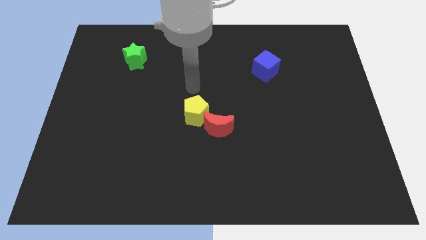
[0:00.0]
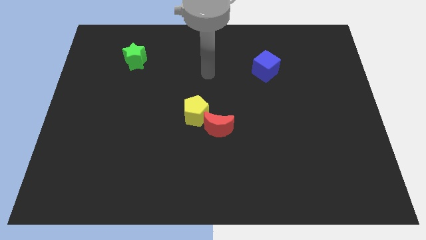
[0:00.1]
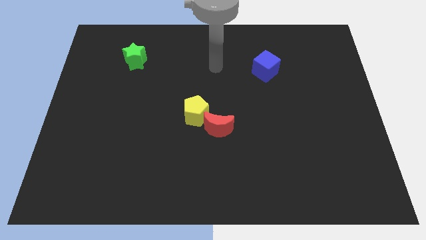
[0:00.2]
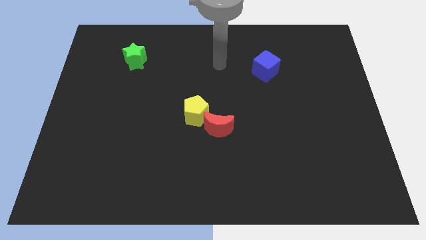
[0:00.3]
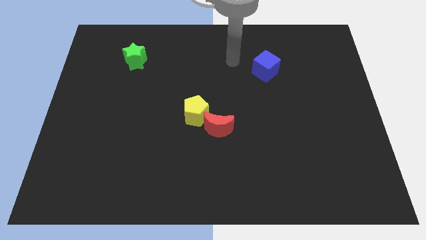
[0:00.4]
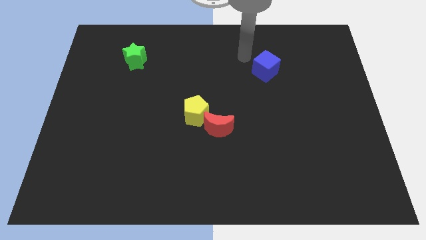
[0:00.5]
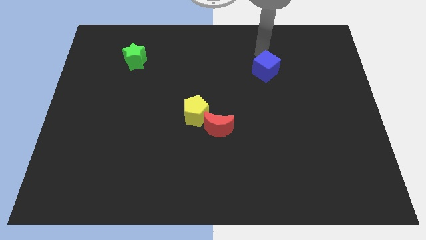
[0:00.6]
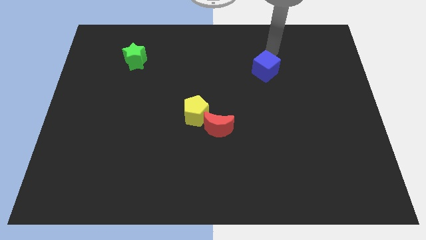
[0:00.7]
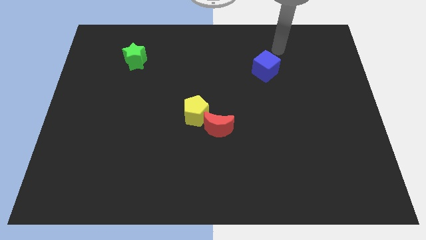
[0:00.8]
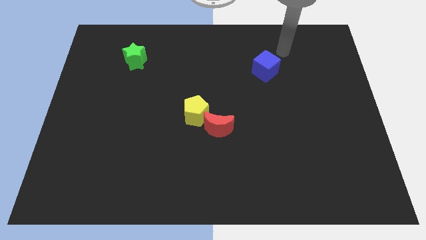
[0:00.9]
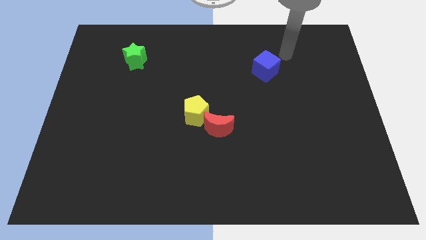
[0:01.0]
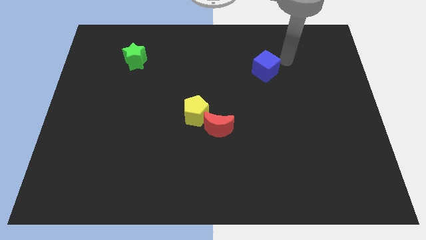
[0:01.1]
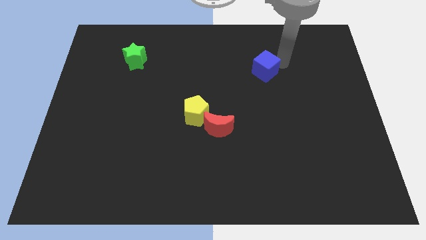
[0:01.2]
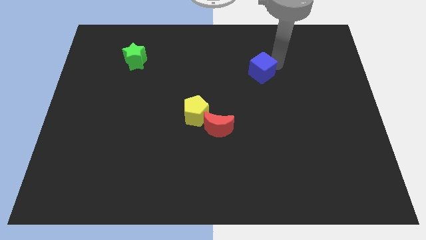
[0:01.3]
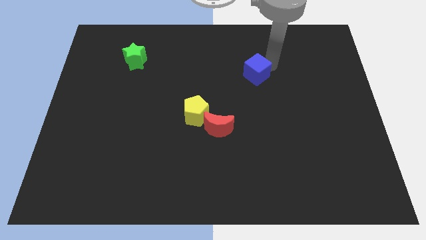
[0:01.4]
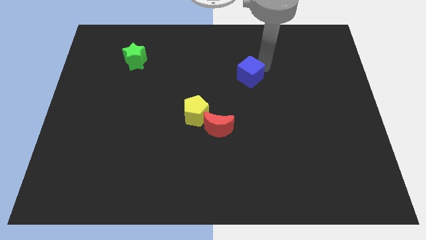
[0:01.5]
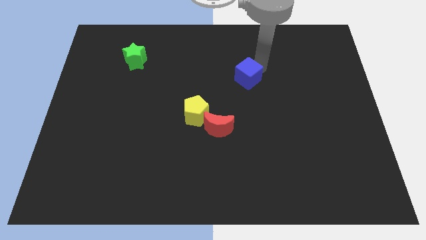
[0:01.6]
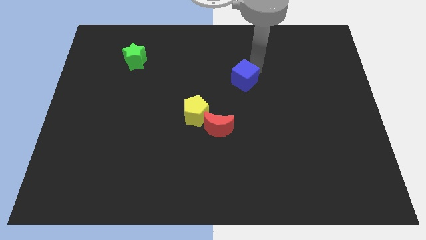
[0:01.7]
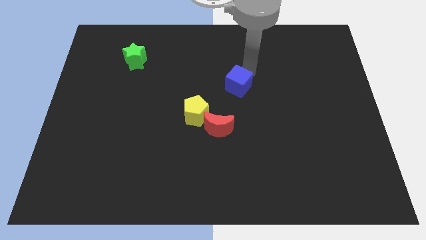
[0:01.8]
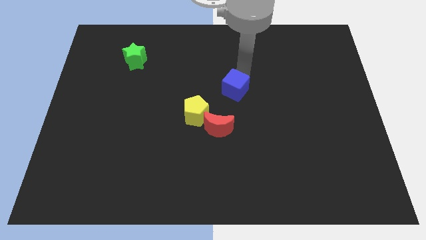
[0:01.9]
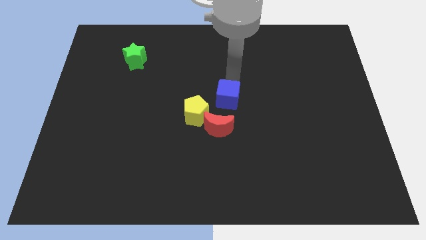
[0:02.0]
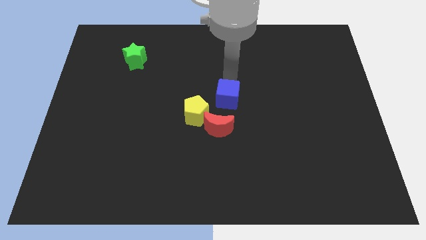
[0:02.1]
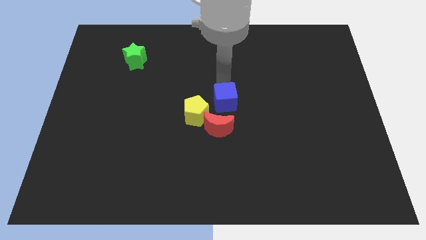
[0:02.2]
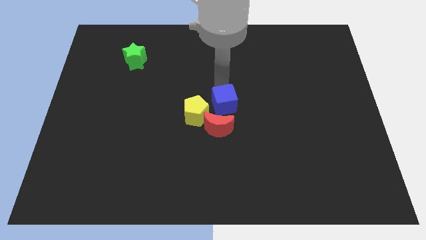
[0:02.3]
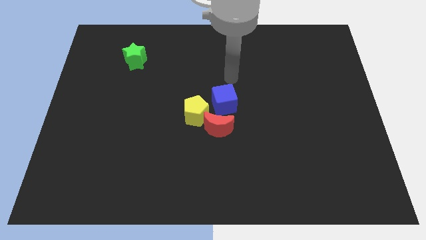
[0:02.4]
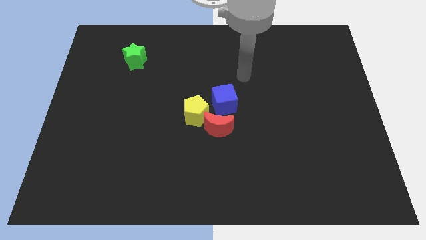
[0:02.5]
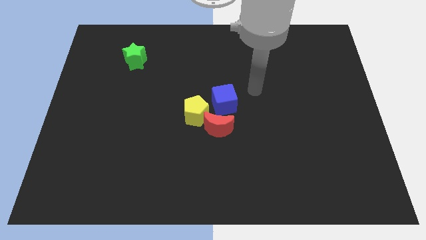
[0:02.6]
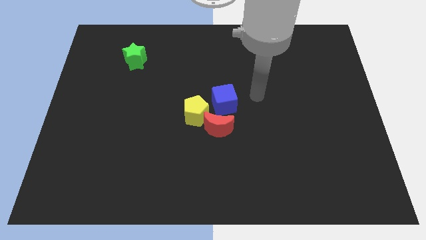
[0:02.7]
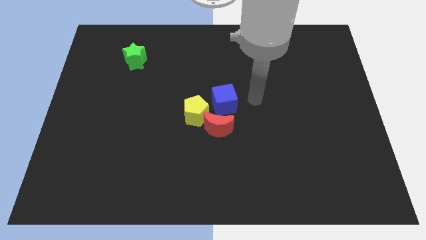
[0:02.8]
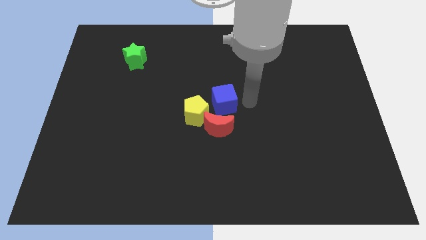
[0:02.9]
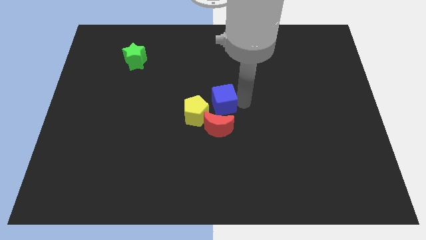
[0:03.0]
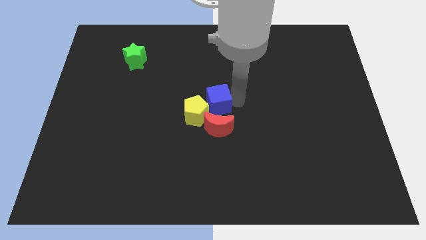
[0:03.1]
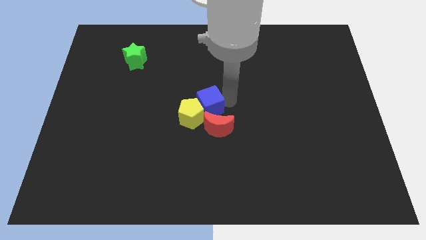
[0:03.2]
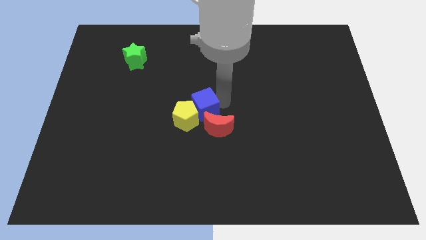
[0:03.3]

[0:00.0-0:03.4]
slide the blue cube close to the yellow pentagon

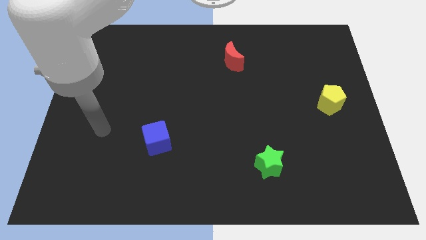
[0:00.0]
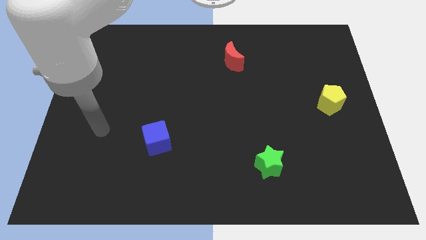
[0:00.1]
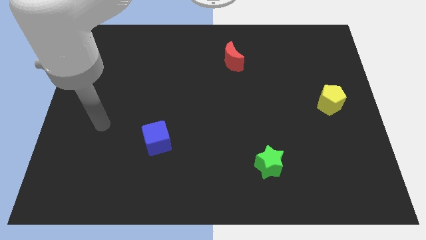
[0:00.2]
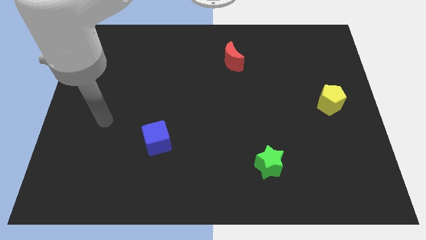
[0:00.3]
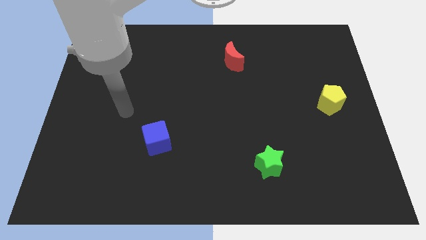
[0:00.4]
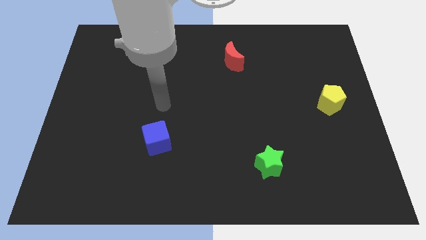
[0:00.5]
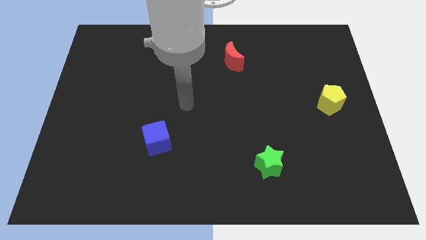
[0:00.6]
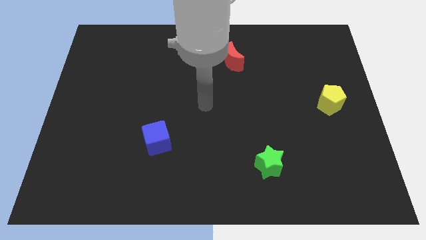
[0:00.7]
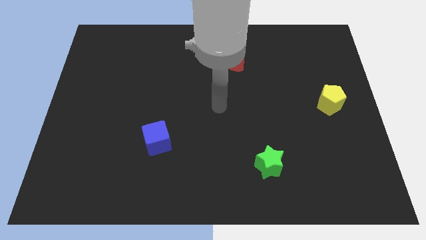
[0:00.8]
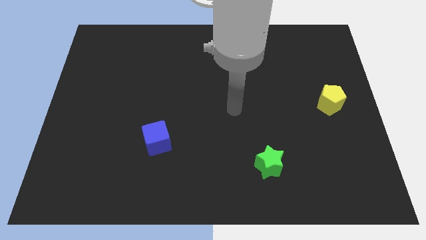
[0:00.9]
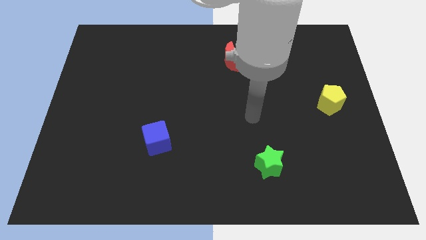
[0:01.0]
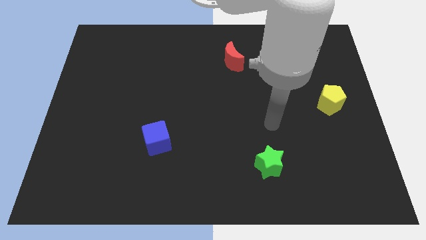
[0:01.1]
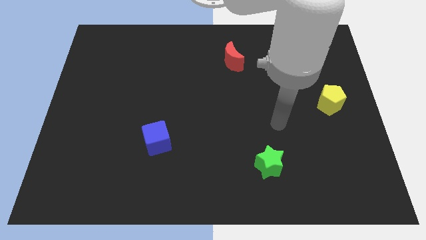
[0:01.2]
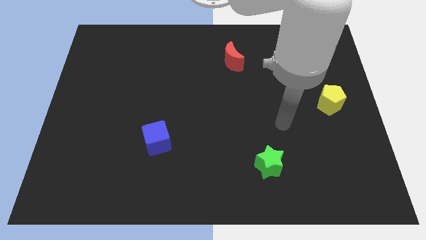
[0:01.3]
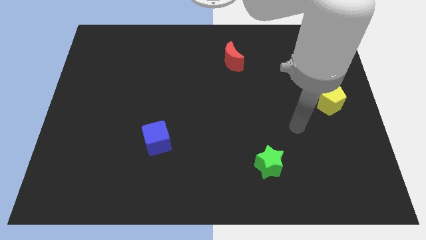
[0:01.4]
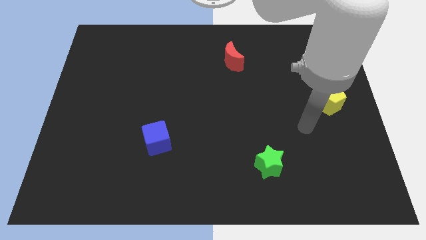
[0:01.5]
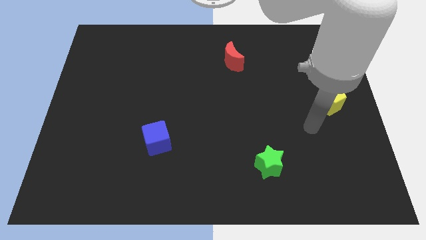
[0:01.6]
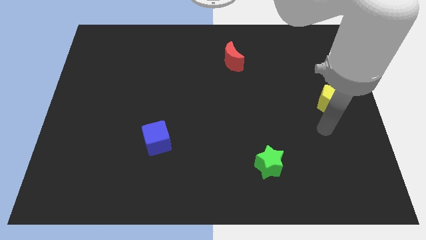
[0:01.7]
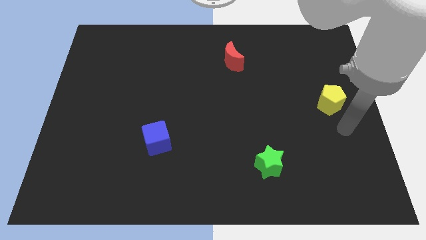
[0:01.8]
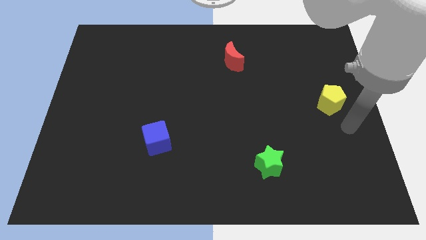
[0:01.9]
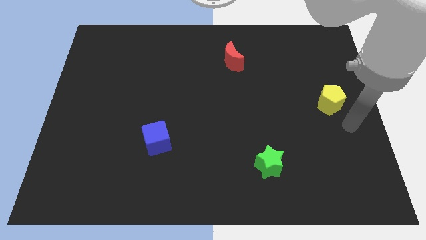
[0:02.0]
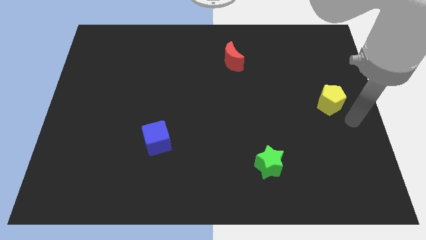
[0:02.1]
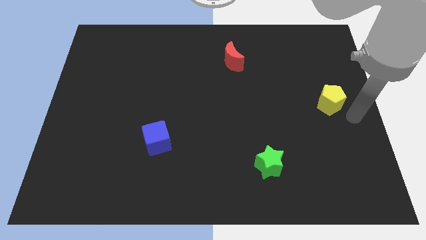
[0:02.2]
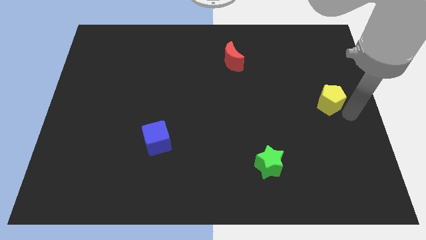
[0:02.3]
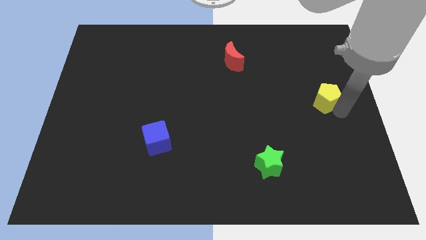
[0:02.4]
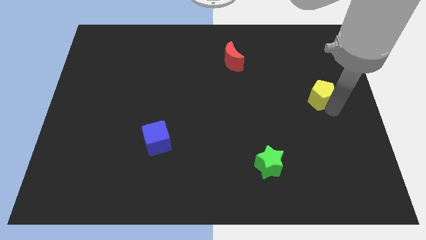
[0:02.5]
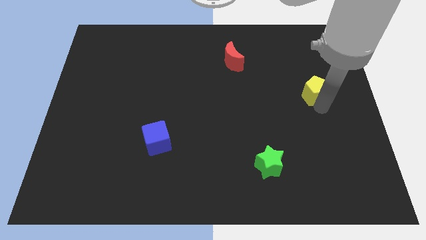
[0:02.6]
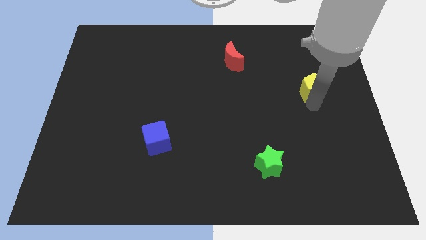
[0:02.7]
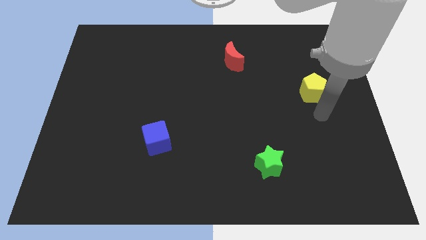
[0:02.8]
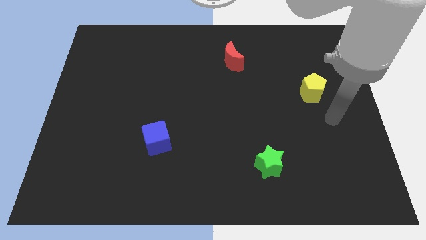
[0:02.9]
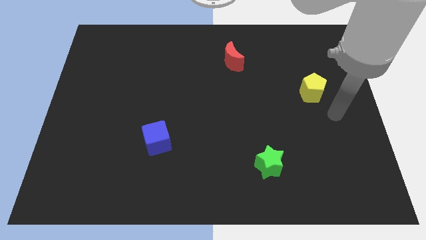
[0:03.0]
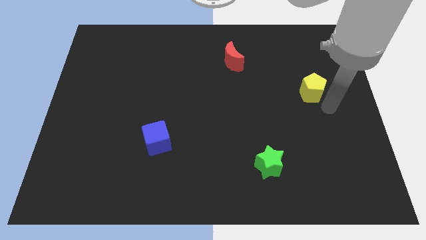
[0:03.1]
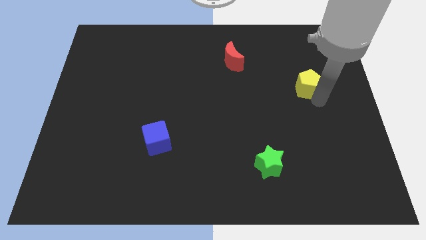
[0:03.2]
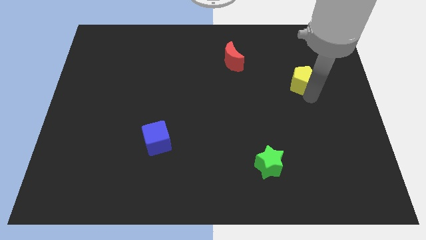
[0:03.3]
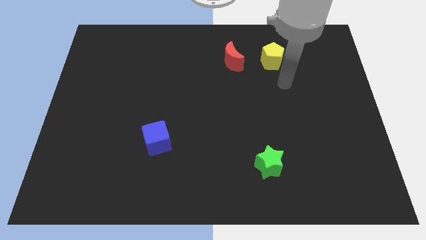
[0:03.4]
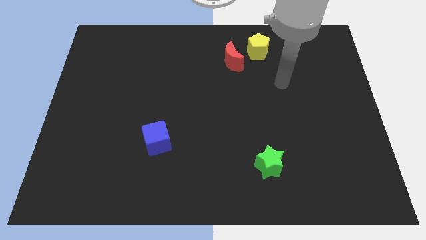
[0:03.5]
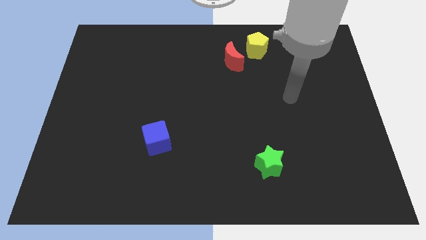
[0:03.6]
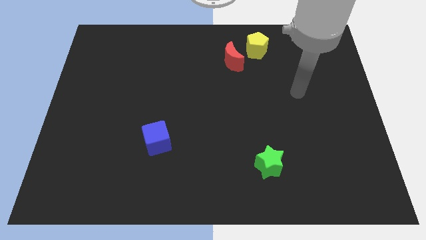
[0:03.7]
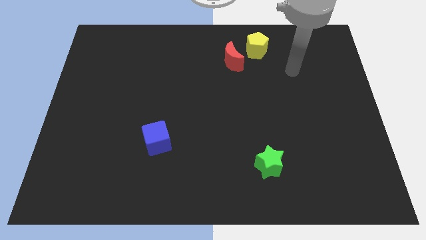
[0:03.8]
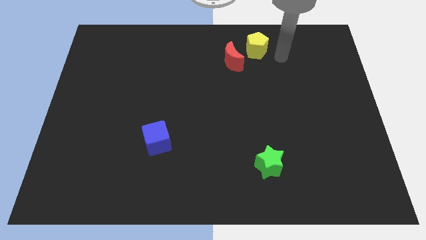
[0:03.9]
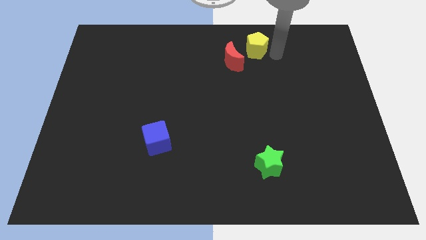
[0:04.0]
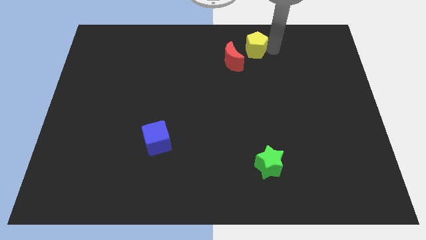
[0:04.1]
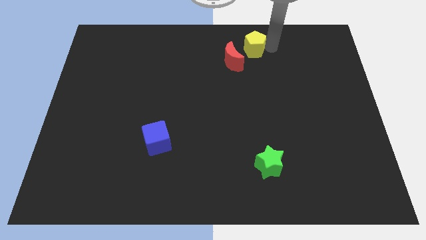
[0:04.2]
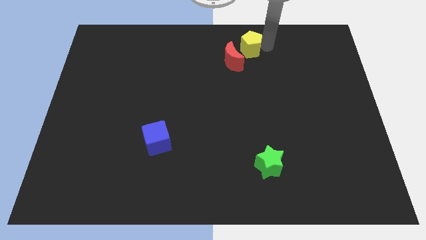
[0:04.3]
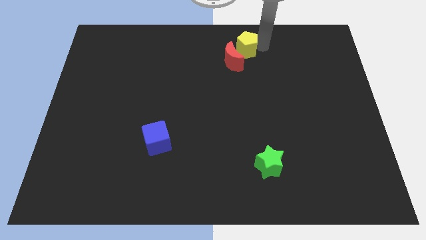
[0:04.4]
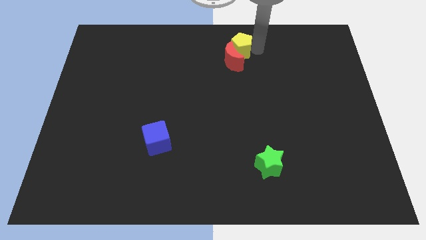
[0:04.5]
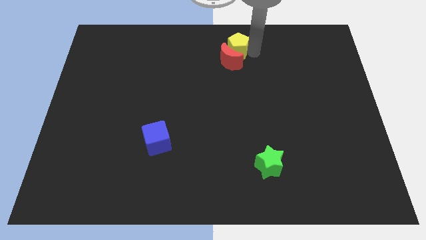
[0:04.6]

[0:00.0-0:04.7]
move the yellow pentagon towards the moon

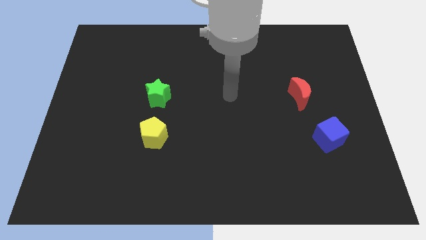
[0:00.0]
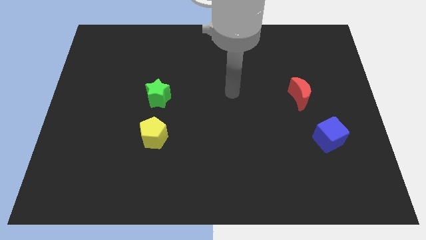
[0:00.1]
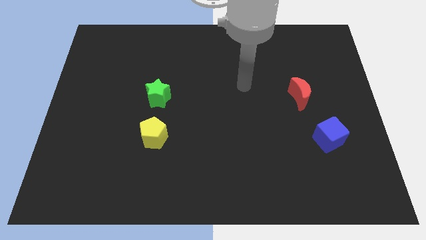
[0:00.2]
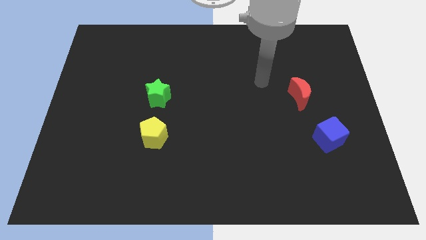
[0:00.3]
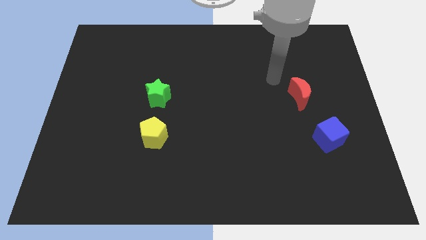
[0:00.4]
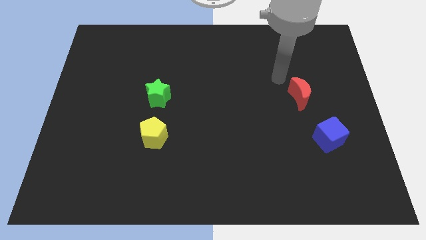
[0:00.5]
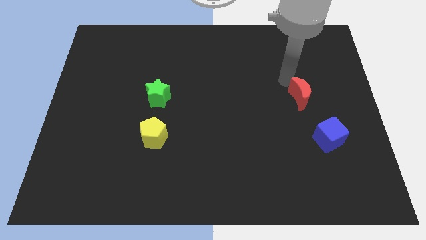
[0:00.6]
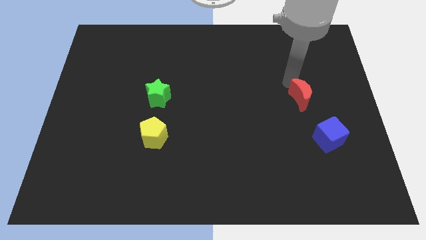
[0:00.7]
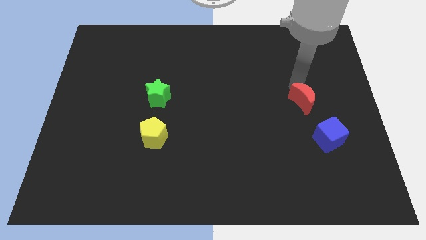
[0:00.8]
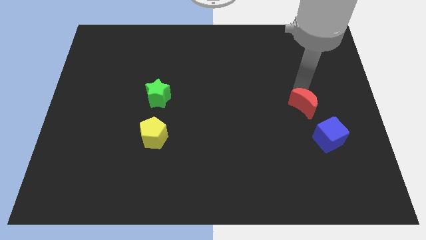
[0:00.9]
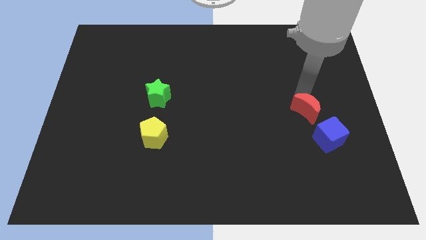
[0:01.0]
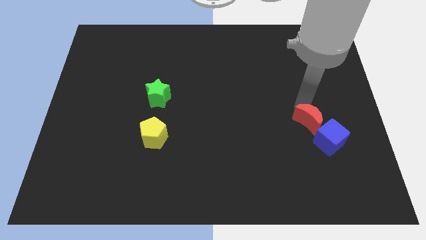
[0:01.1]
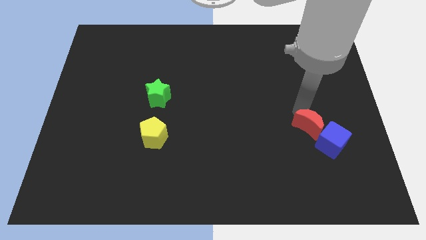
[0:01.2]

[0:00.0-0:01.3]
move the moon close to the cube
